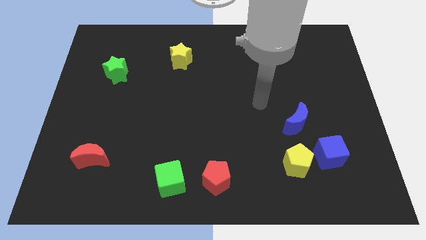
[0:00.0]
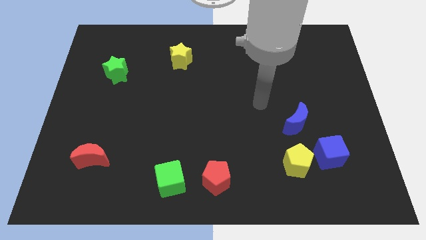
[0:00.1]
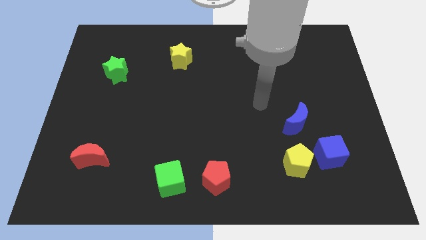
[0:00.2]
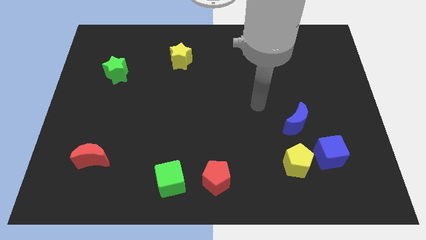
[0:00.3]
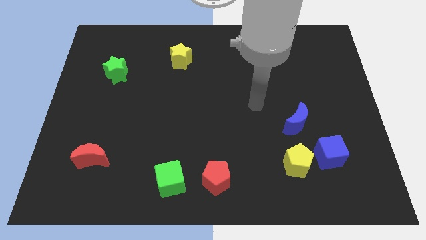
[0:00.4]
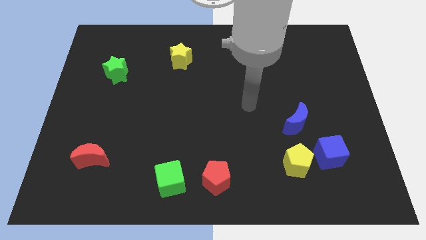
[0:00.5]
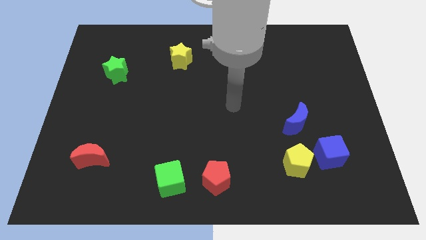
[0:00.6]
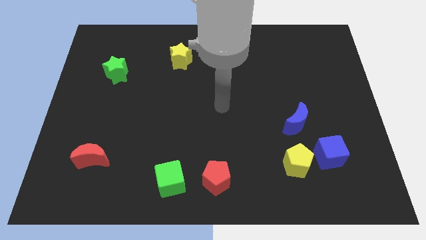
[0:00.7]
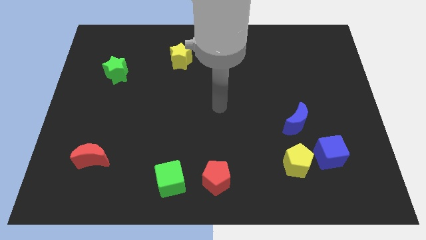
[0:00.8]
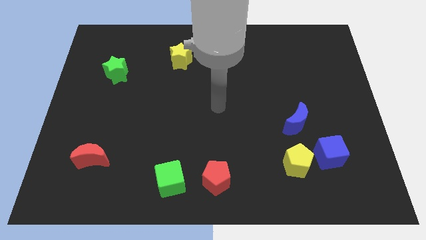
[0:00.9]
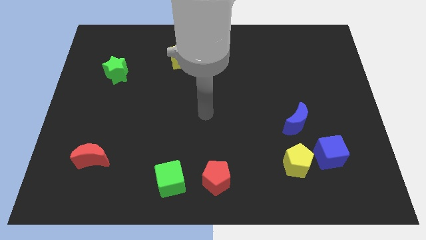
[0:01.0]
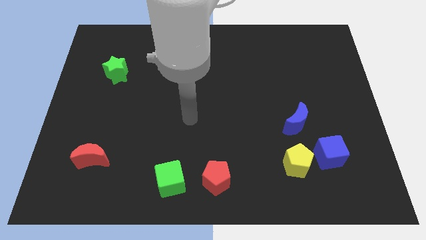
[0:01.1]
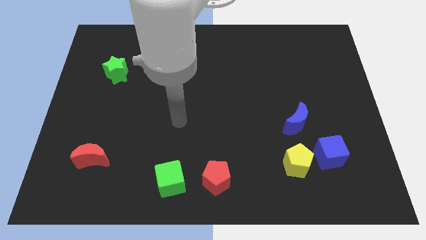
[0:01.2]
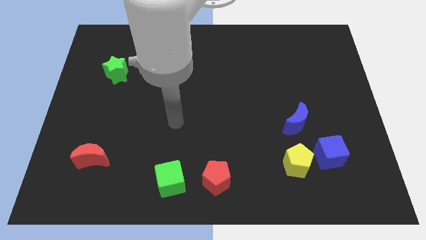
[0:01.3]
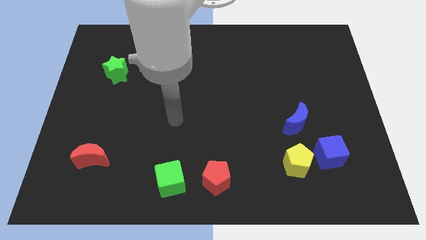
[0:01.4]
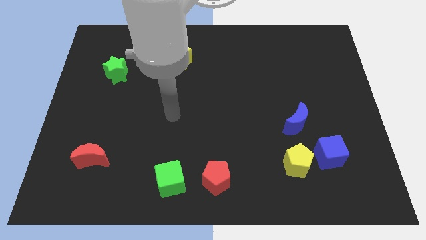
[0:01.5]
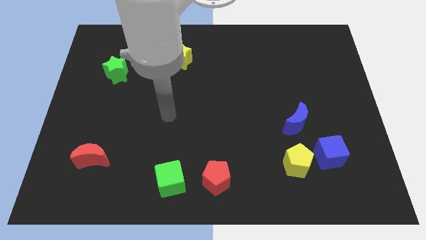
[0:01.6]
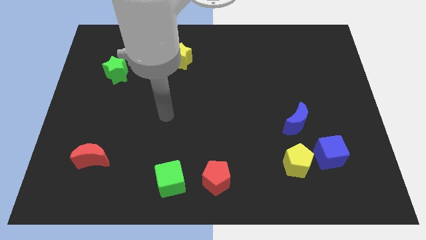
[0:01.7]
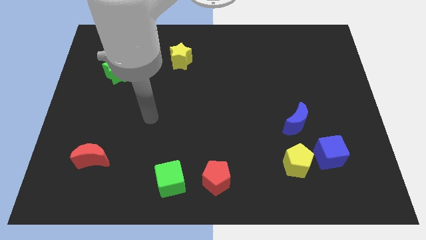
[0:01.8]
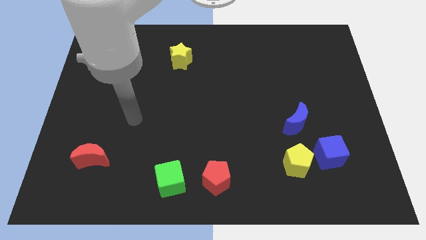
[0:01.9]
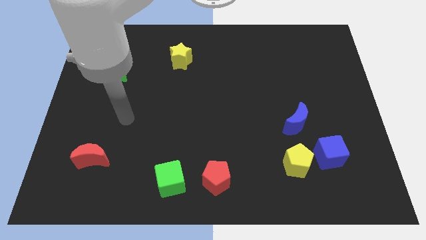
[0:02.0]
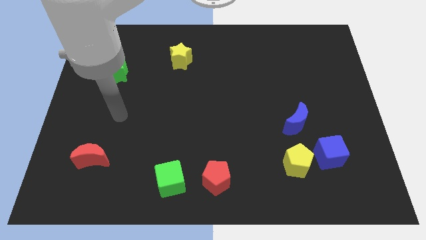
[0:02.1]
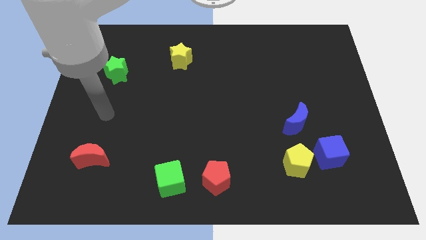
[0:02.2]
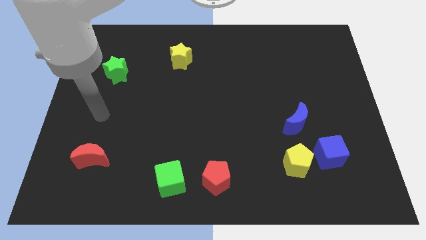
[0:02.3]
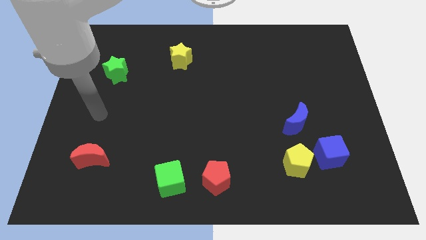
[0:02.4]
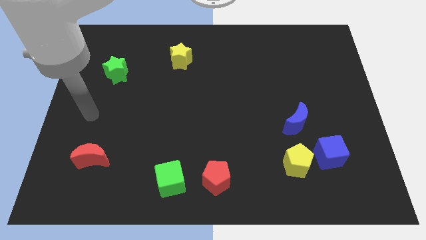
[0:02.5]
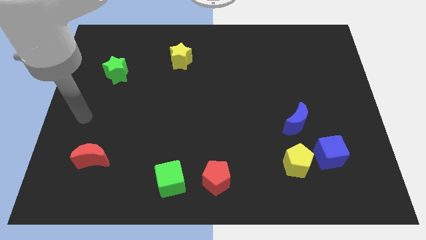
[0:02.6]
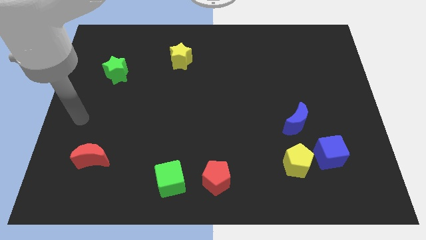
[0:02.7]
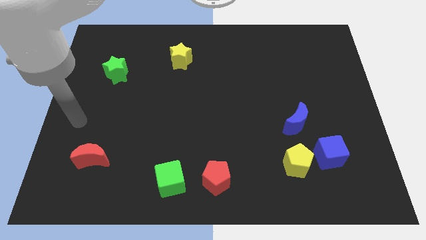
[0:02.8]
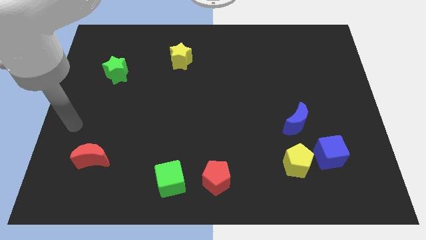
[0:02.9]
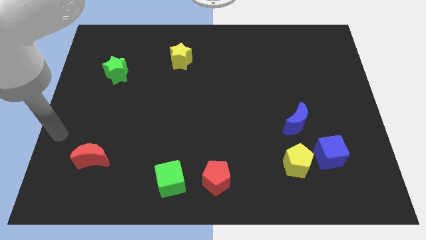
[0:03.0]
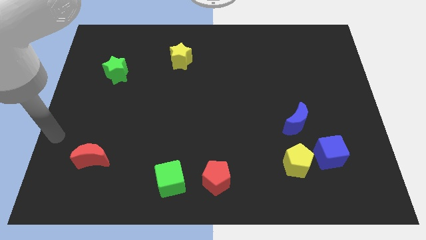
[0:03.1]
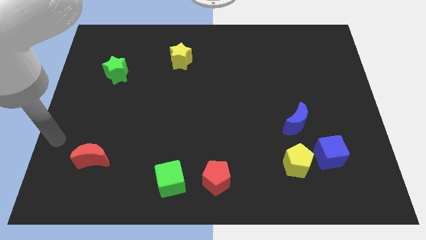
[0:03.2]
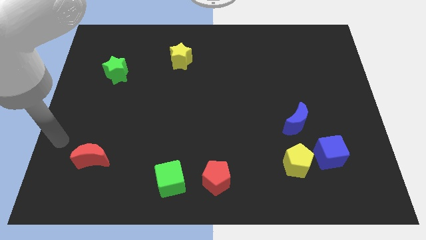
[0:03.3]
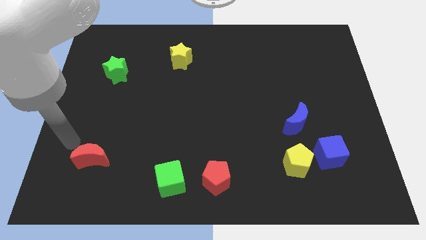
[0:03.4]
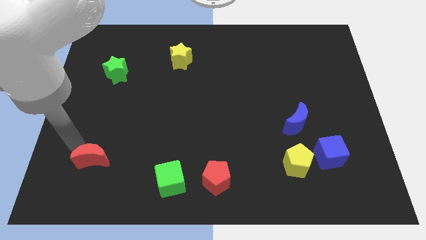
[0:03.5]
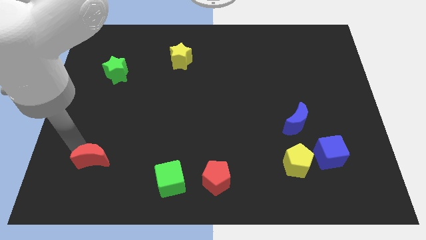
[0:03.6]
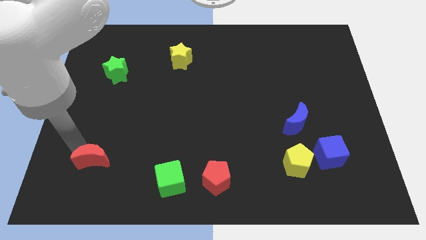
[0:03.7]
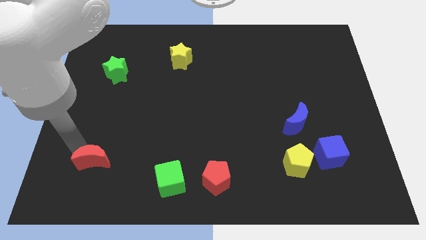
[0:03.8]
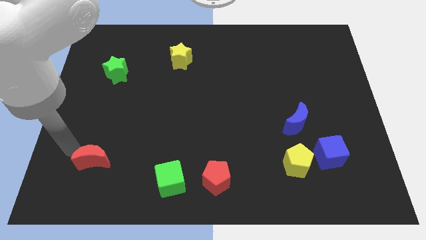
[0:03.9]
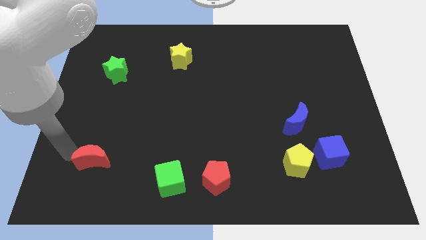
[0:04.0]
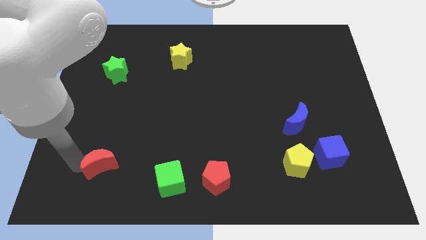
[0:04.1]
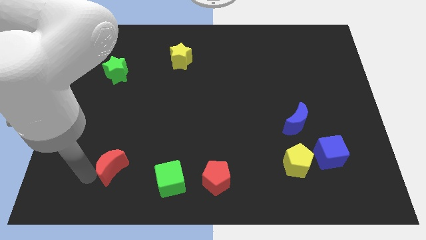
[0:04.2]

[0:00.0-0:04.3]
push the red crescent towards the green cube

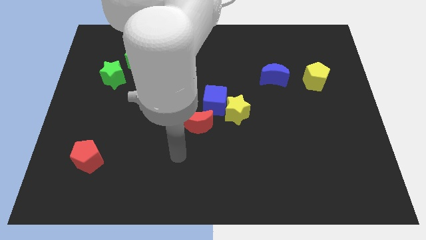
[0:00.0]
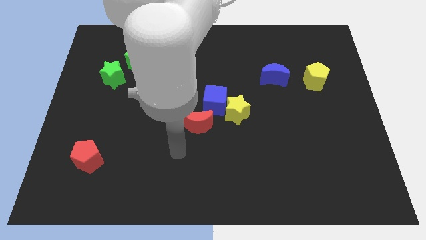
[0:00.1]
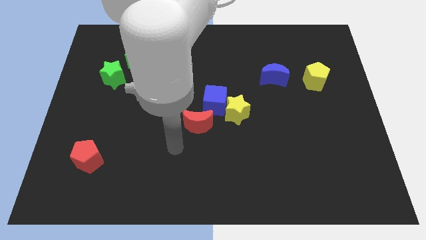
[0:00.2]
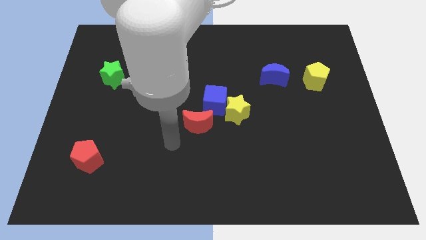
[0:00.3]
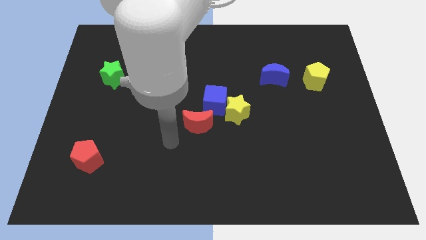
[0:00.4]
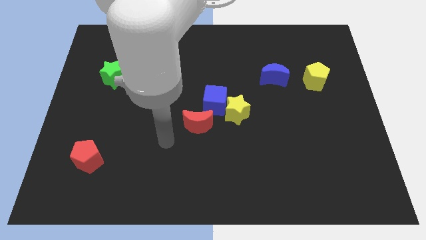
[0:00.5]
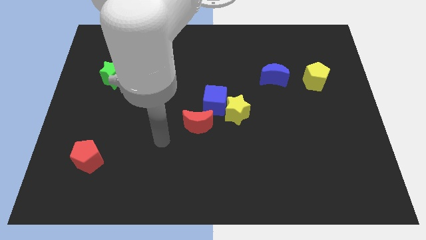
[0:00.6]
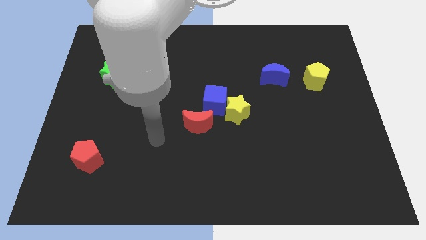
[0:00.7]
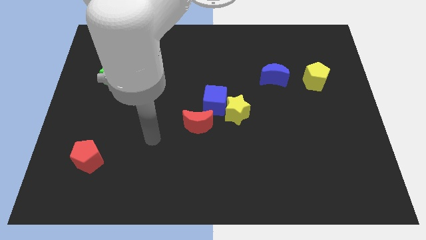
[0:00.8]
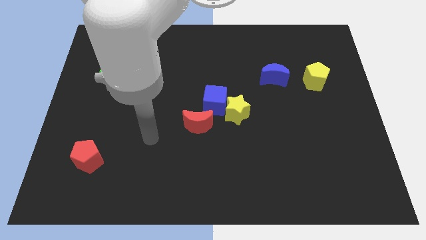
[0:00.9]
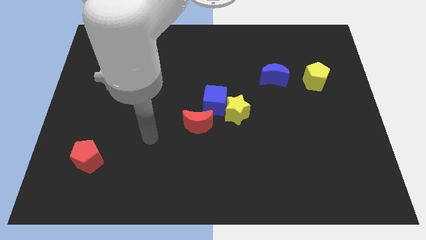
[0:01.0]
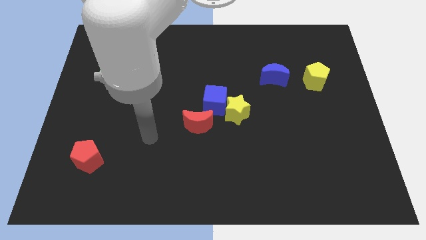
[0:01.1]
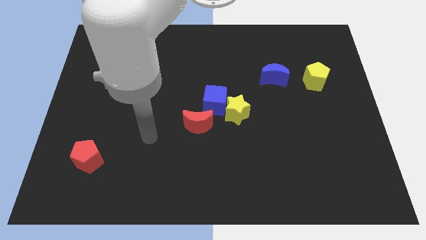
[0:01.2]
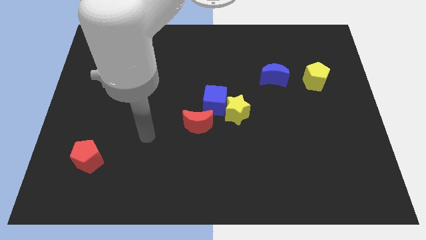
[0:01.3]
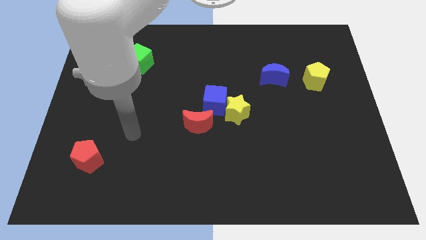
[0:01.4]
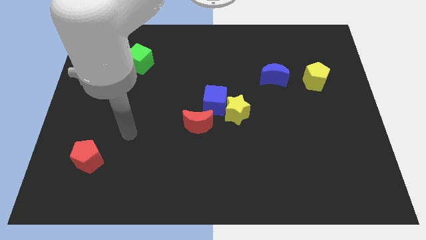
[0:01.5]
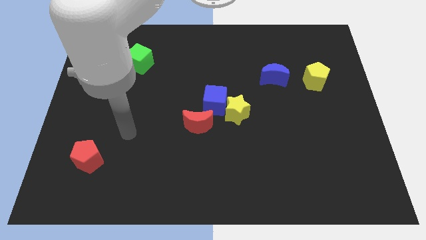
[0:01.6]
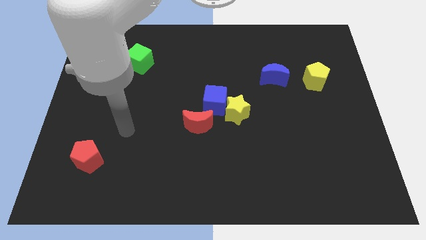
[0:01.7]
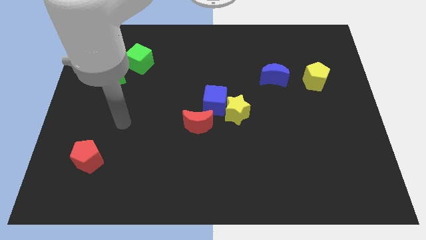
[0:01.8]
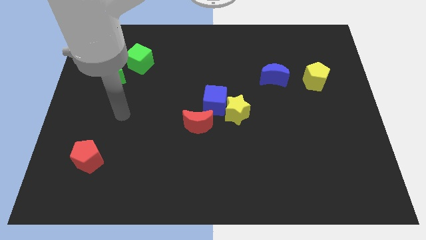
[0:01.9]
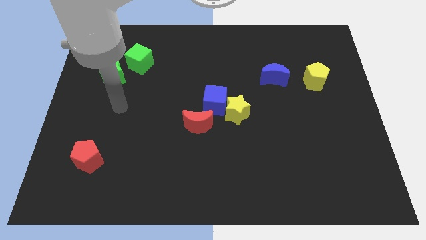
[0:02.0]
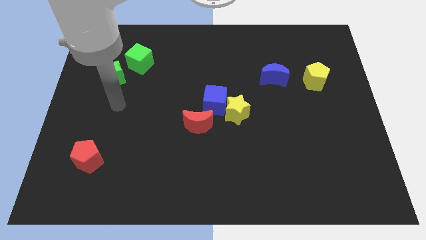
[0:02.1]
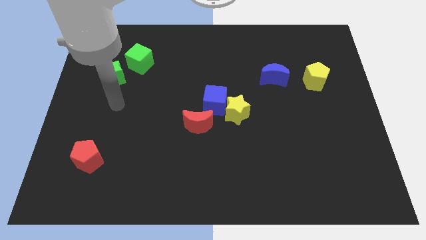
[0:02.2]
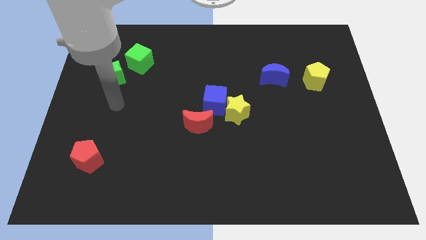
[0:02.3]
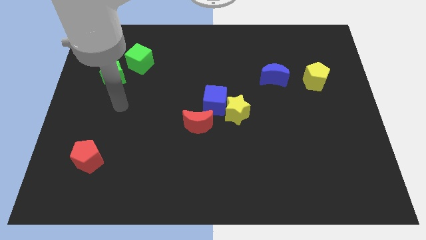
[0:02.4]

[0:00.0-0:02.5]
place your hand under green star

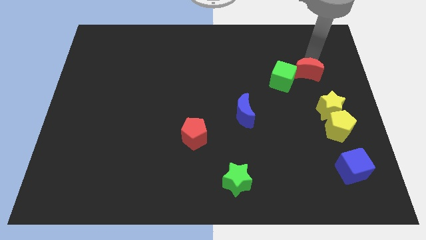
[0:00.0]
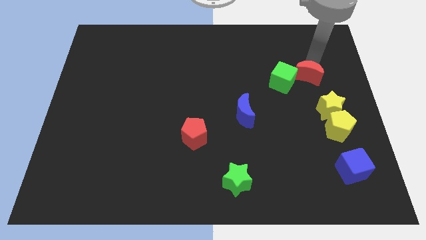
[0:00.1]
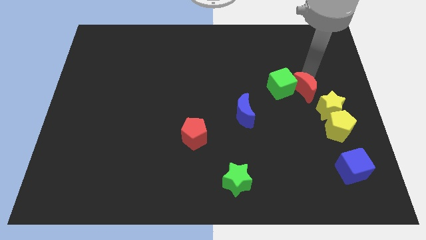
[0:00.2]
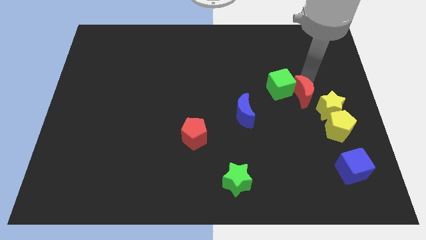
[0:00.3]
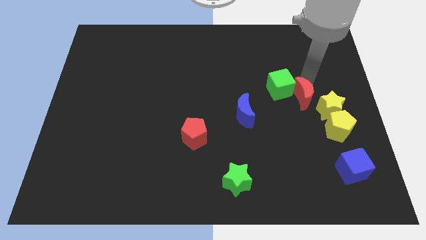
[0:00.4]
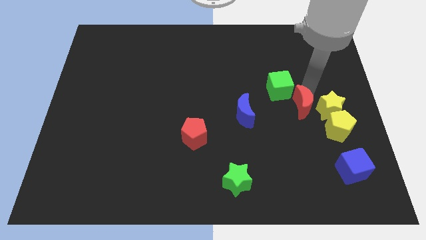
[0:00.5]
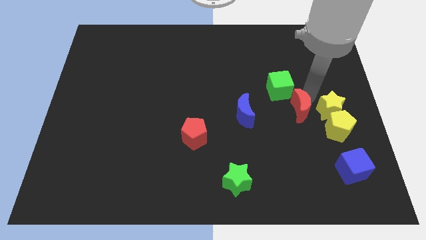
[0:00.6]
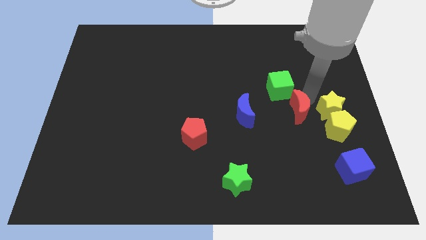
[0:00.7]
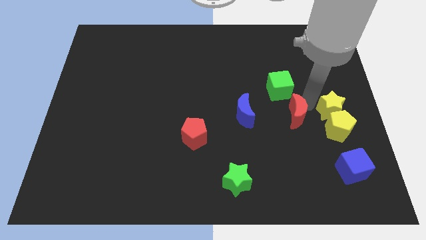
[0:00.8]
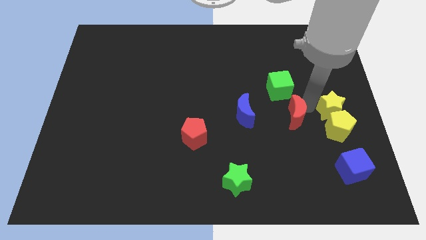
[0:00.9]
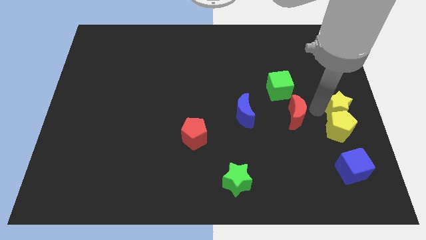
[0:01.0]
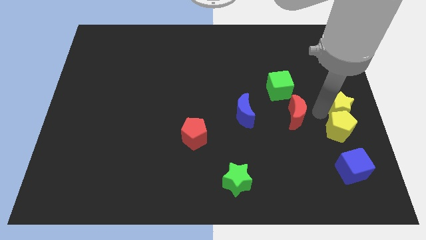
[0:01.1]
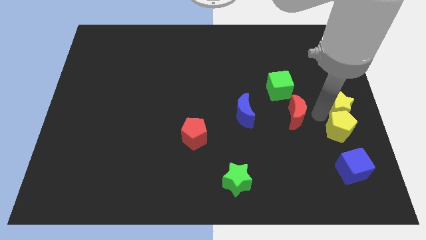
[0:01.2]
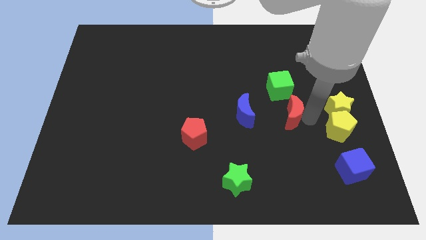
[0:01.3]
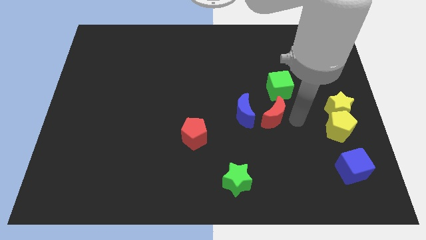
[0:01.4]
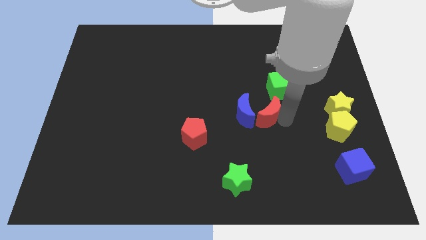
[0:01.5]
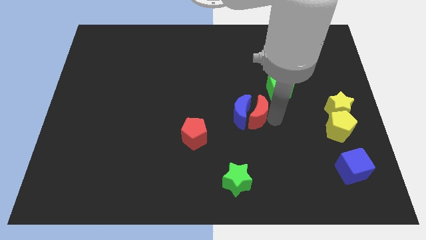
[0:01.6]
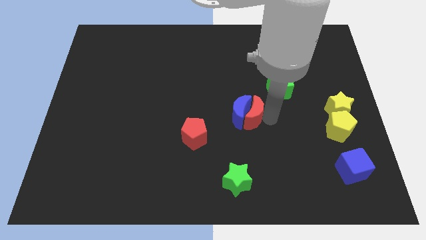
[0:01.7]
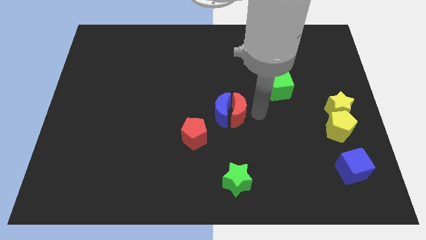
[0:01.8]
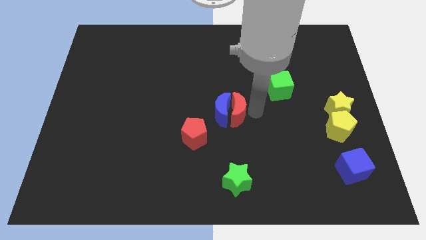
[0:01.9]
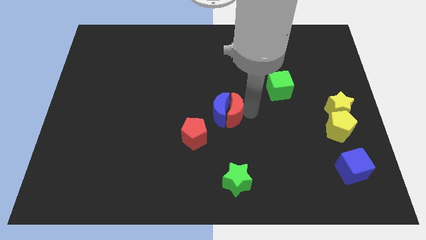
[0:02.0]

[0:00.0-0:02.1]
move the red crescent into the blue crescent

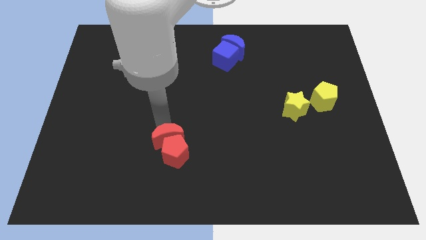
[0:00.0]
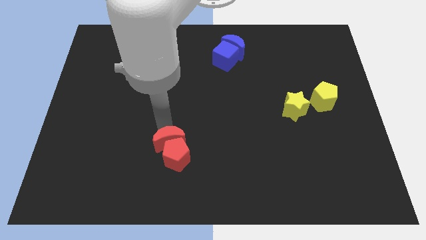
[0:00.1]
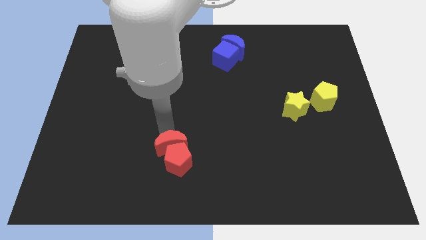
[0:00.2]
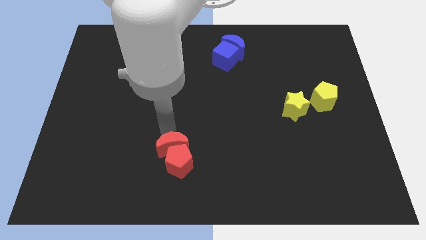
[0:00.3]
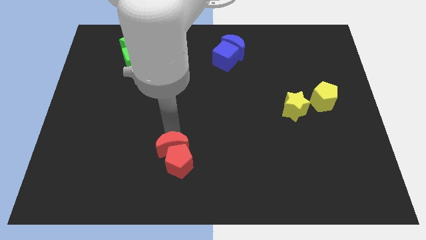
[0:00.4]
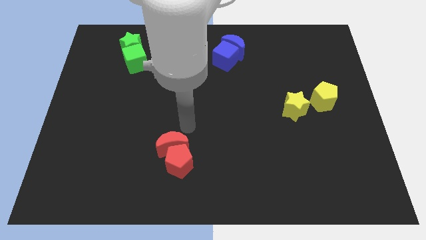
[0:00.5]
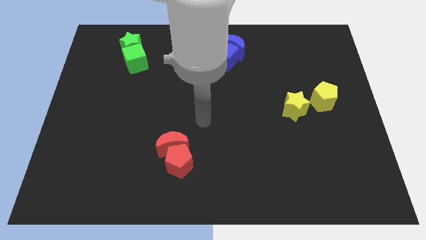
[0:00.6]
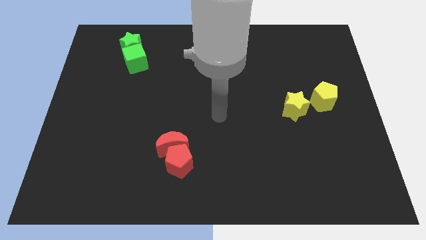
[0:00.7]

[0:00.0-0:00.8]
move the group of red blocks to the down
